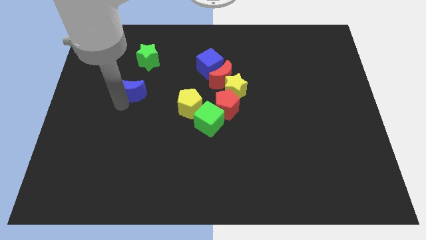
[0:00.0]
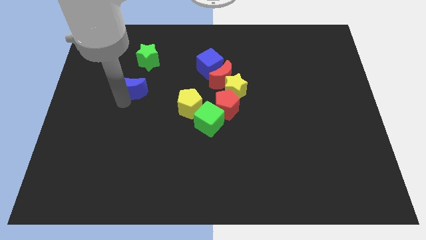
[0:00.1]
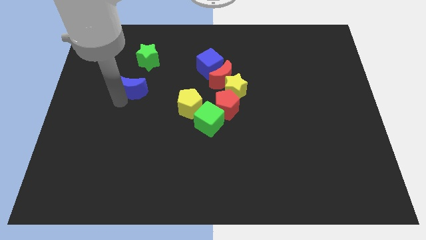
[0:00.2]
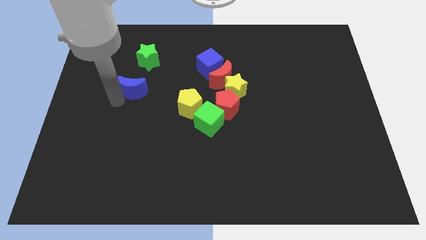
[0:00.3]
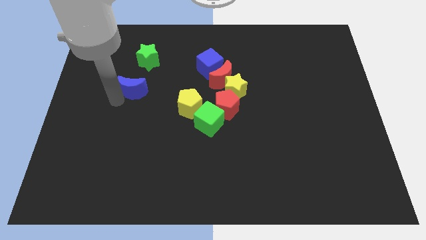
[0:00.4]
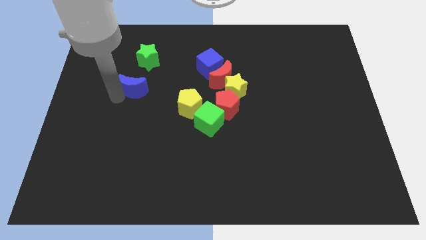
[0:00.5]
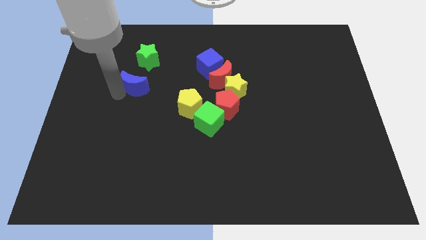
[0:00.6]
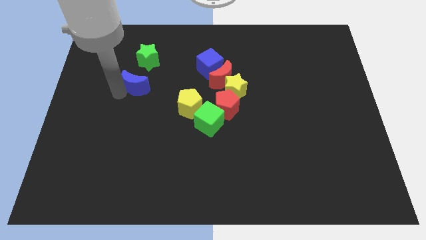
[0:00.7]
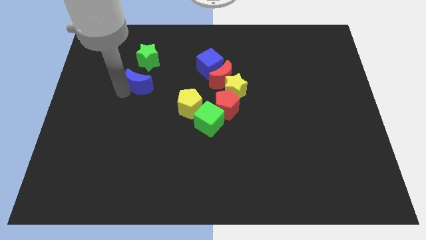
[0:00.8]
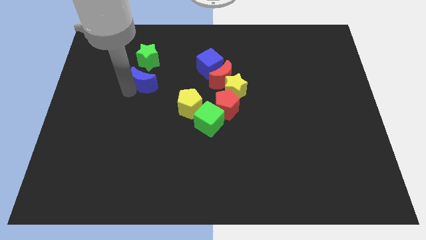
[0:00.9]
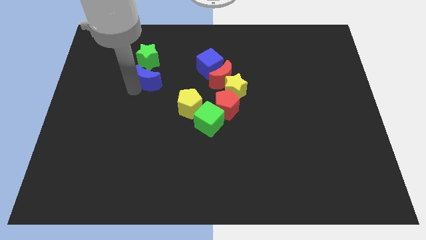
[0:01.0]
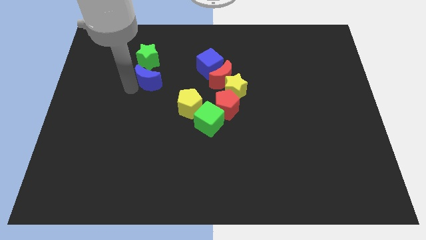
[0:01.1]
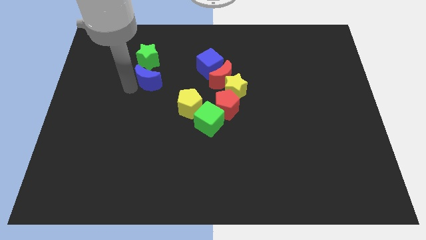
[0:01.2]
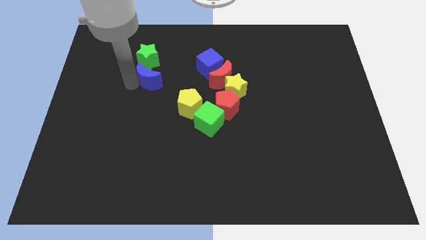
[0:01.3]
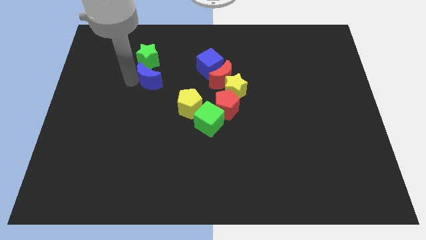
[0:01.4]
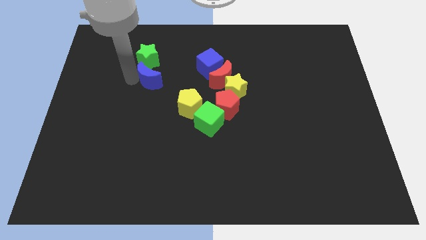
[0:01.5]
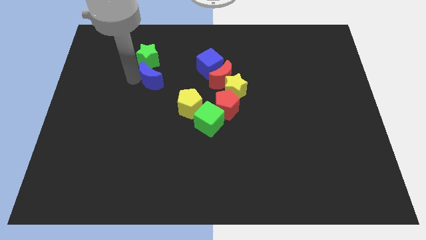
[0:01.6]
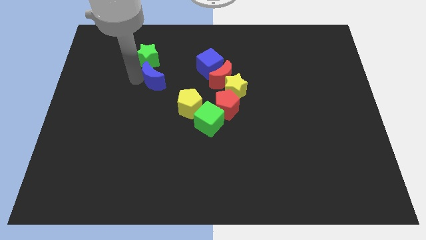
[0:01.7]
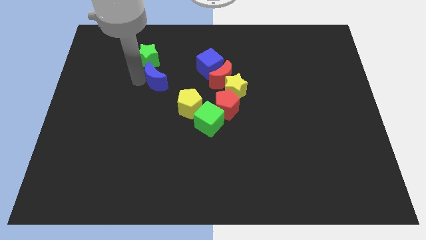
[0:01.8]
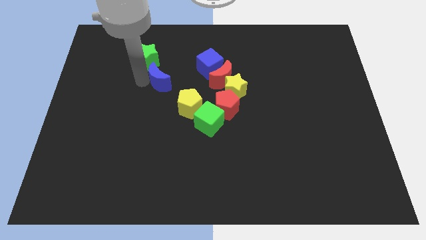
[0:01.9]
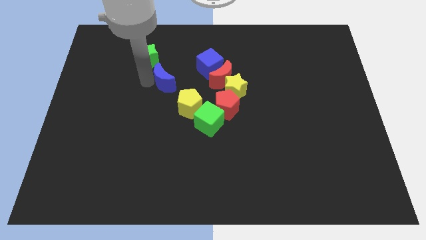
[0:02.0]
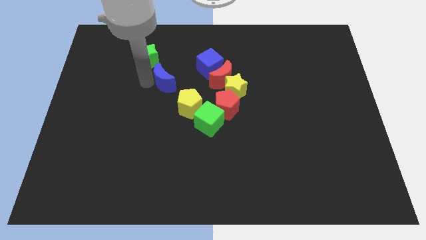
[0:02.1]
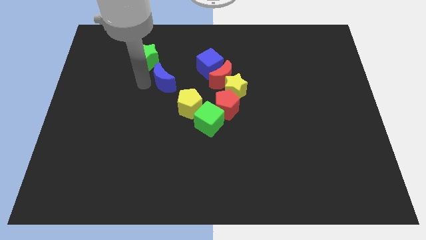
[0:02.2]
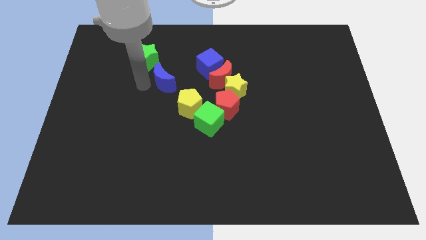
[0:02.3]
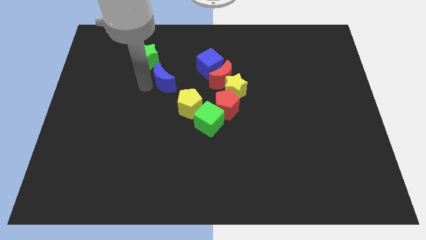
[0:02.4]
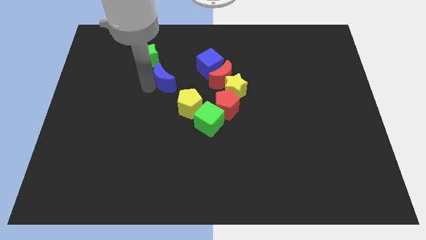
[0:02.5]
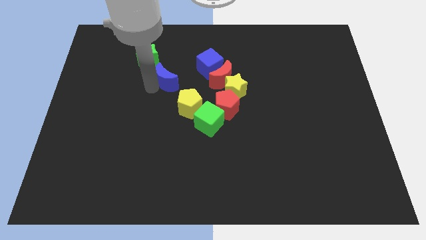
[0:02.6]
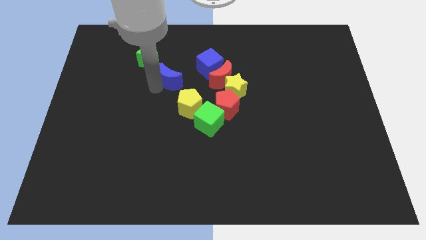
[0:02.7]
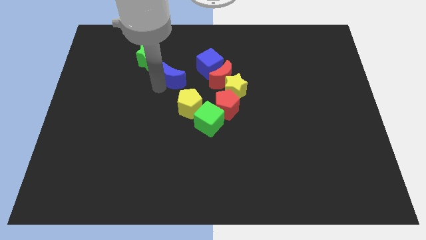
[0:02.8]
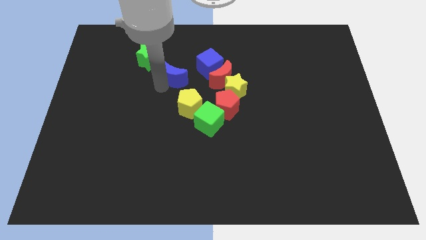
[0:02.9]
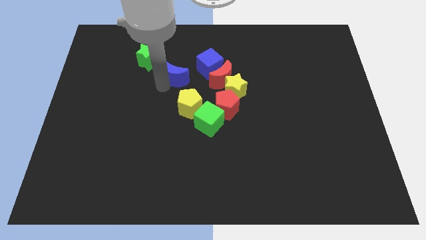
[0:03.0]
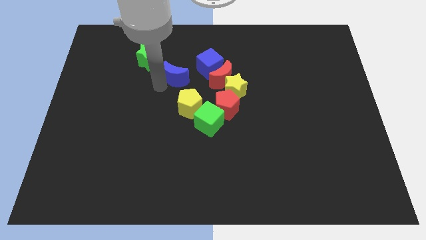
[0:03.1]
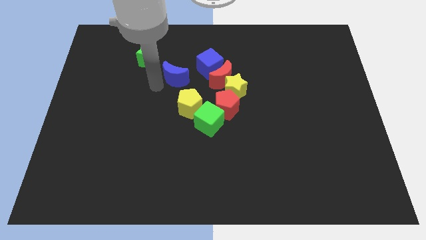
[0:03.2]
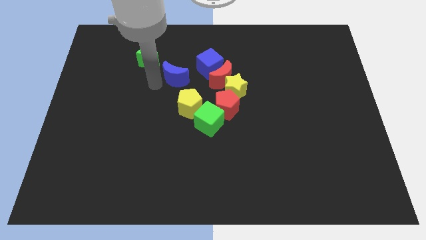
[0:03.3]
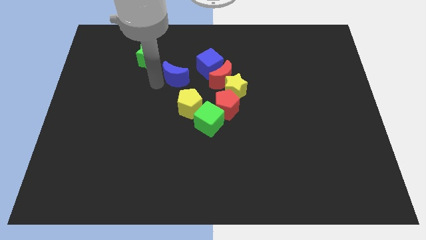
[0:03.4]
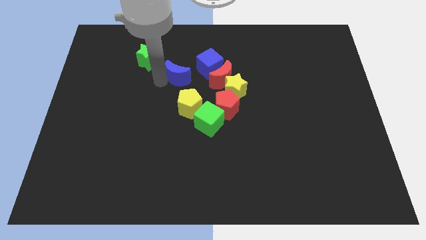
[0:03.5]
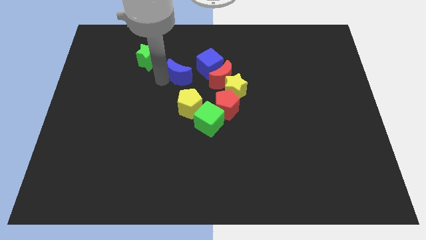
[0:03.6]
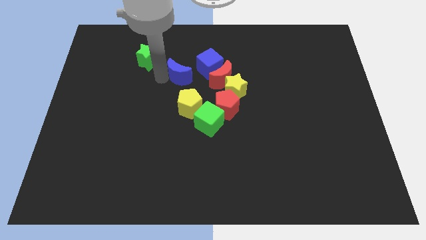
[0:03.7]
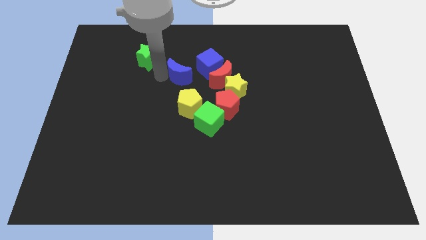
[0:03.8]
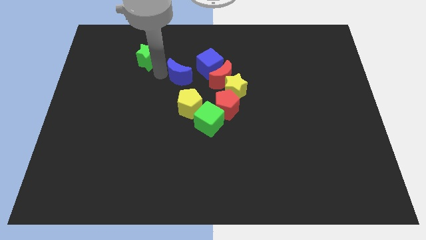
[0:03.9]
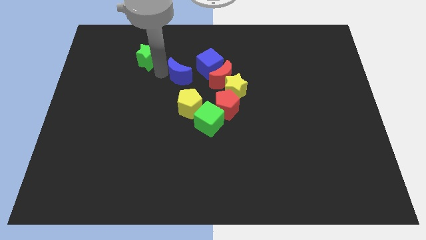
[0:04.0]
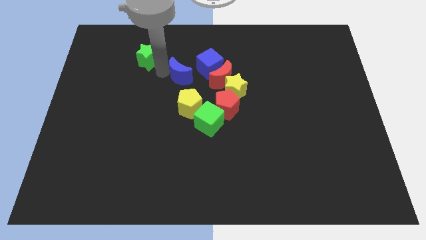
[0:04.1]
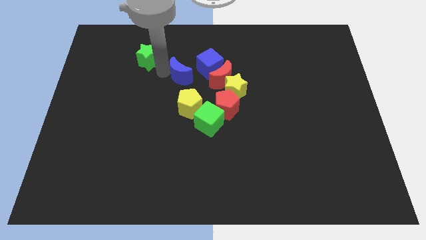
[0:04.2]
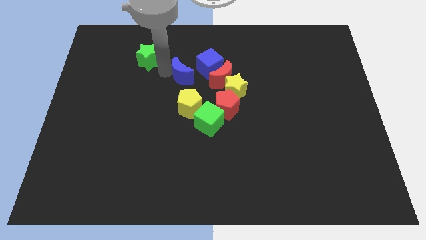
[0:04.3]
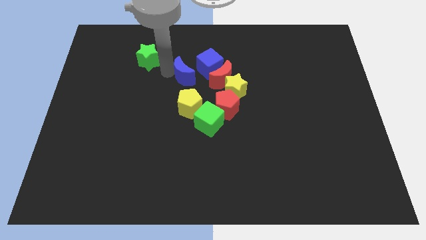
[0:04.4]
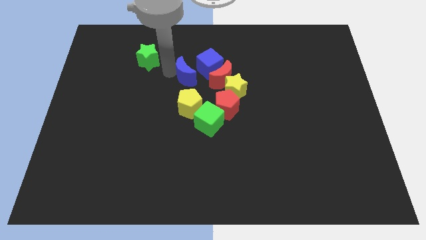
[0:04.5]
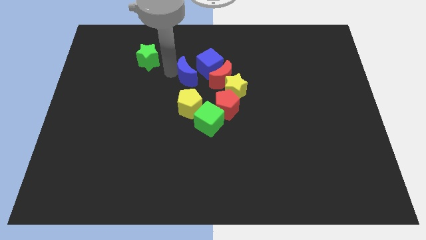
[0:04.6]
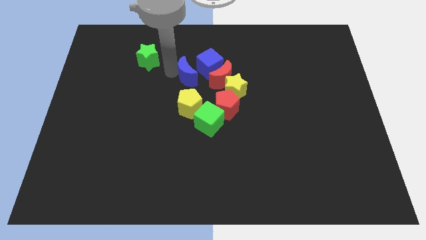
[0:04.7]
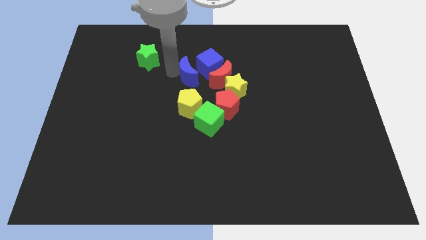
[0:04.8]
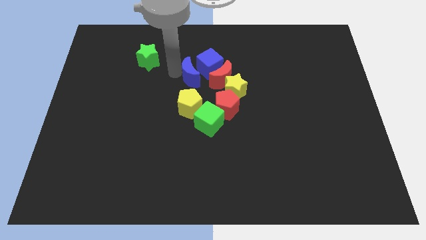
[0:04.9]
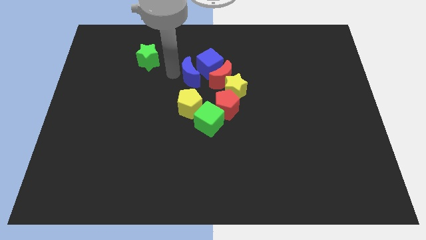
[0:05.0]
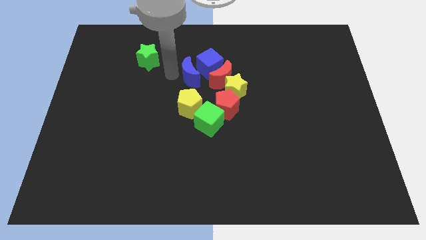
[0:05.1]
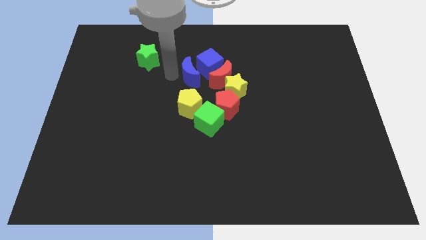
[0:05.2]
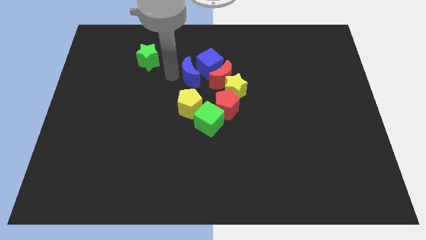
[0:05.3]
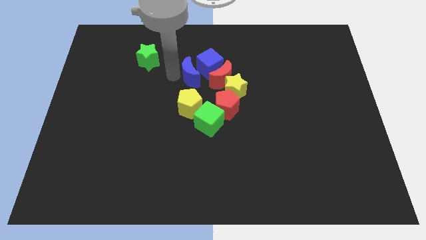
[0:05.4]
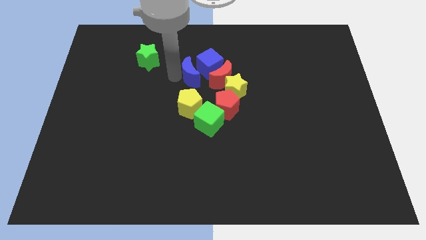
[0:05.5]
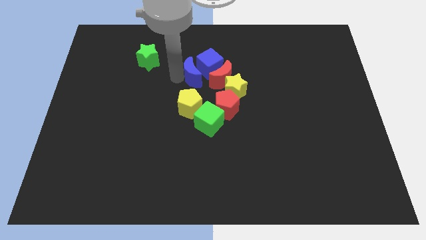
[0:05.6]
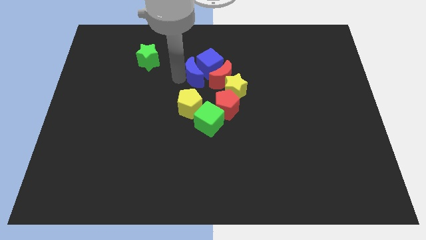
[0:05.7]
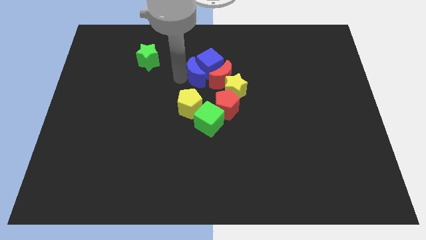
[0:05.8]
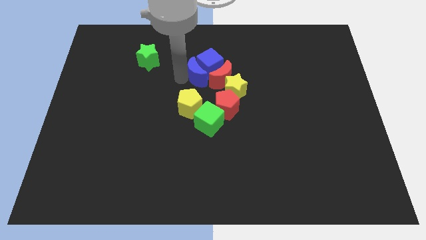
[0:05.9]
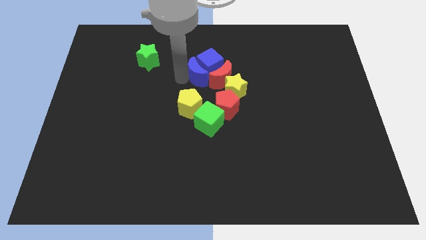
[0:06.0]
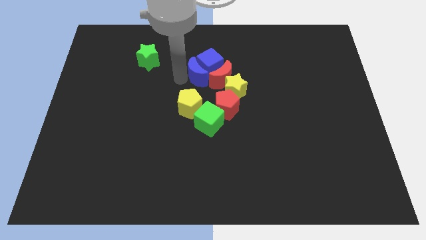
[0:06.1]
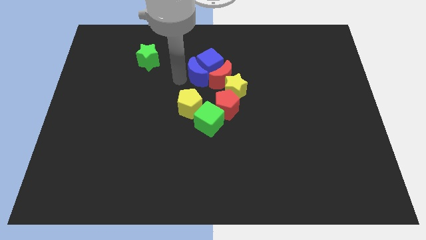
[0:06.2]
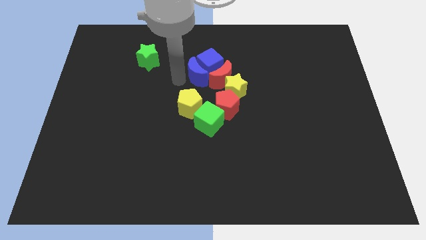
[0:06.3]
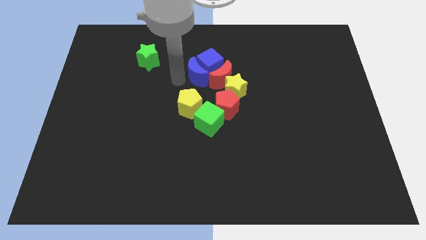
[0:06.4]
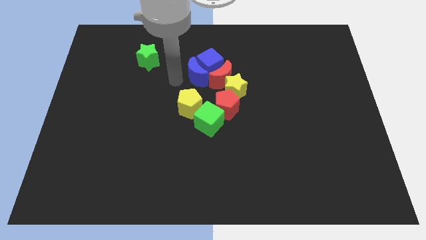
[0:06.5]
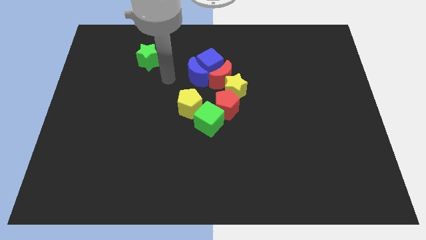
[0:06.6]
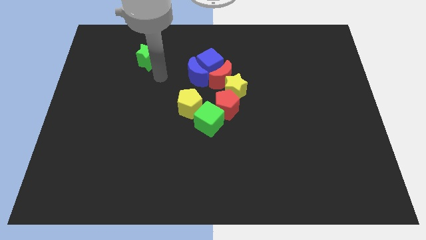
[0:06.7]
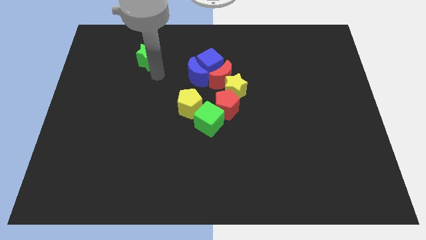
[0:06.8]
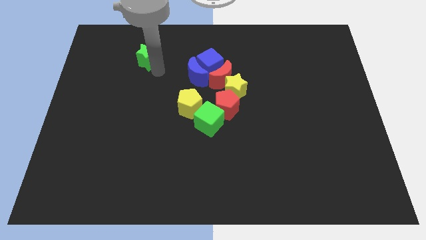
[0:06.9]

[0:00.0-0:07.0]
push the blue moon into the blue cube

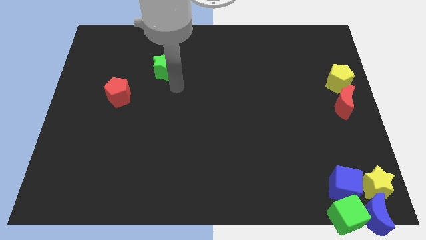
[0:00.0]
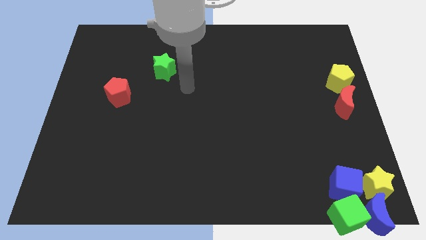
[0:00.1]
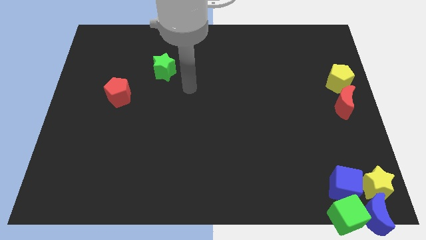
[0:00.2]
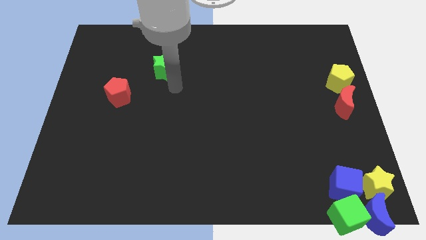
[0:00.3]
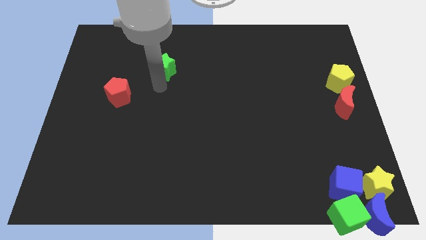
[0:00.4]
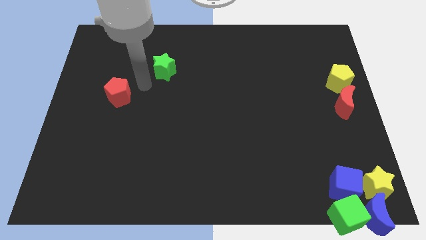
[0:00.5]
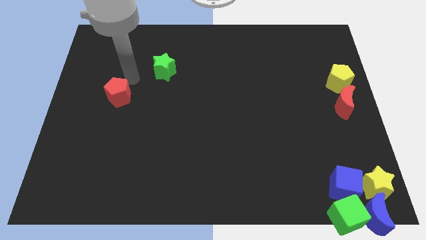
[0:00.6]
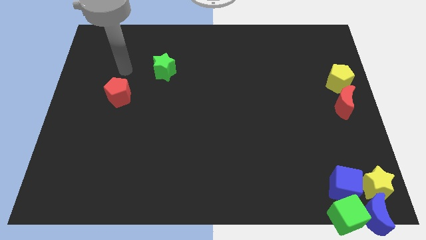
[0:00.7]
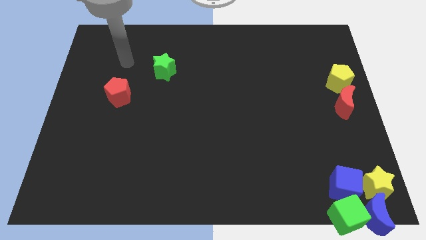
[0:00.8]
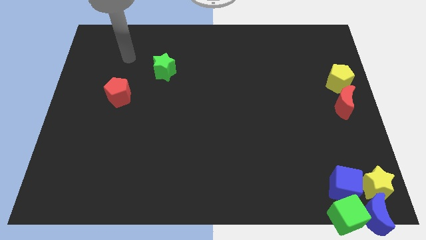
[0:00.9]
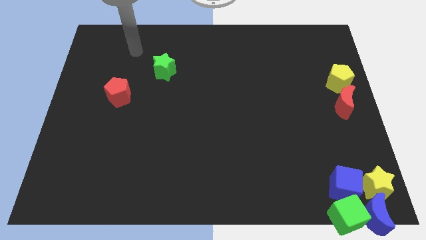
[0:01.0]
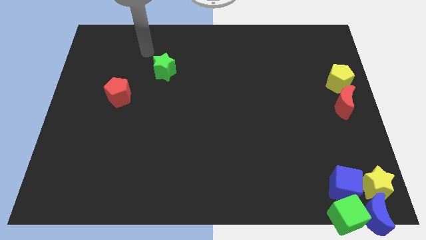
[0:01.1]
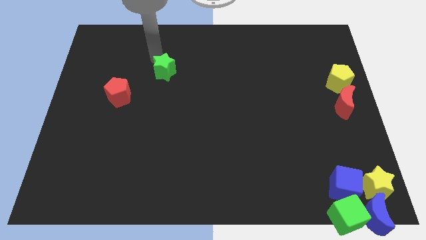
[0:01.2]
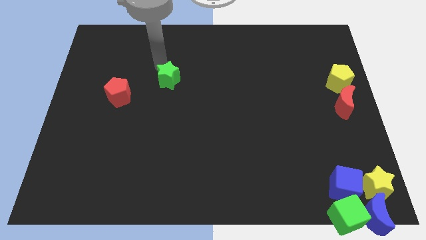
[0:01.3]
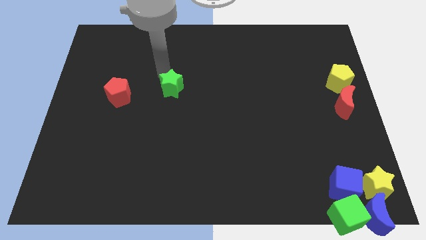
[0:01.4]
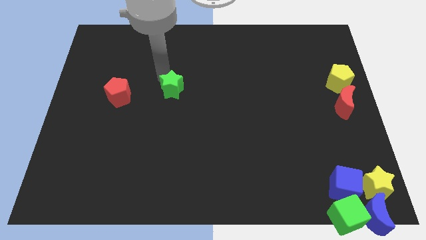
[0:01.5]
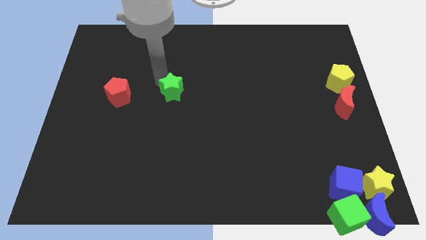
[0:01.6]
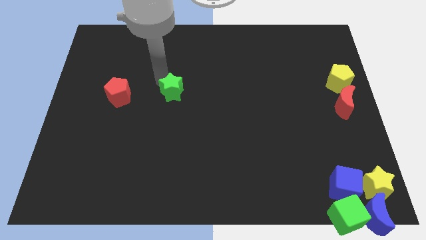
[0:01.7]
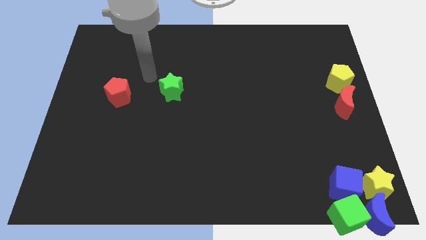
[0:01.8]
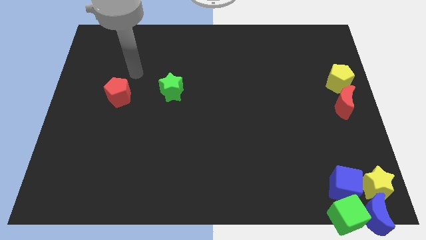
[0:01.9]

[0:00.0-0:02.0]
place the green star parallel right to the red pentagon
